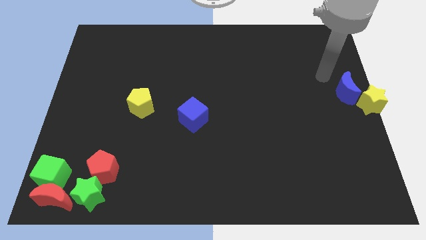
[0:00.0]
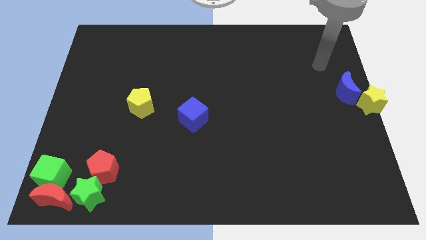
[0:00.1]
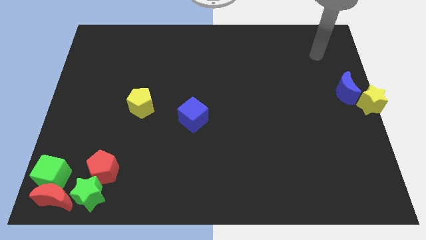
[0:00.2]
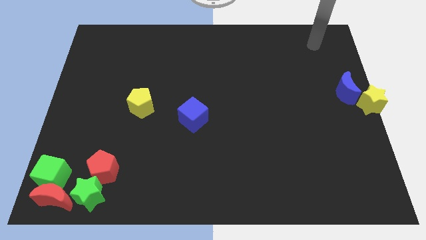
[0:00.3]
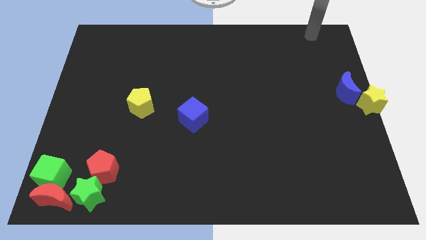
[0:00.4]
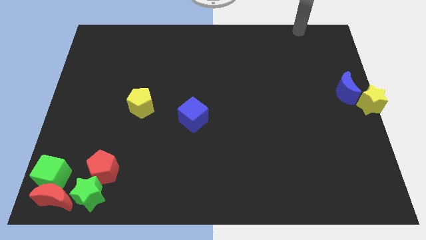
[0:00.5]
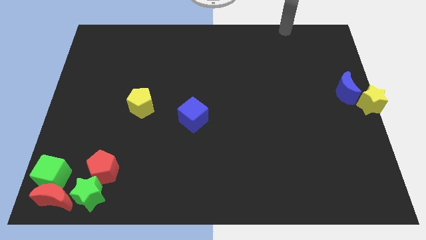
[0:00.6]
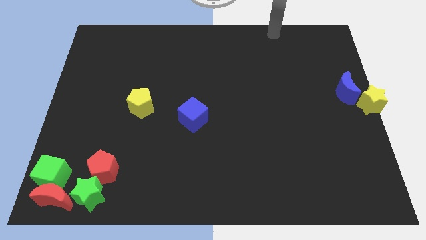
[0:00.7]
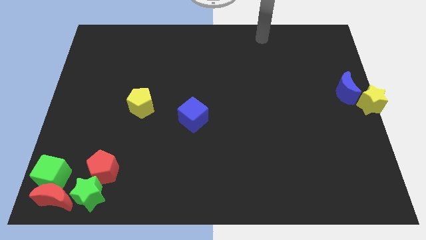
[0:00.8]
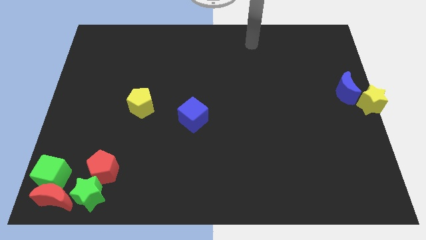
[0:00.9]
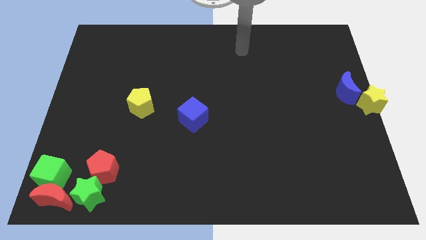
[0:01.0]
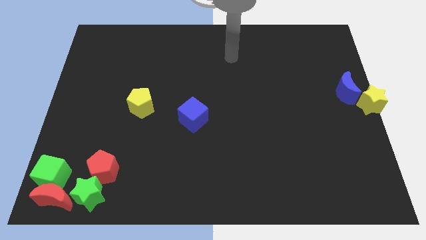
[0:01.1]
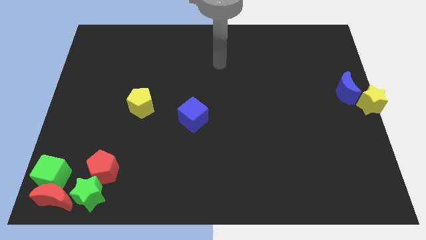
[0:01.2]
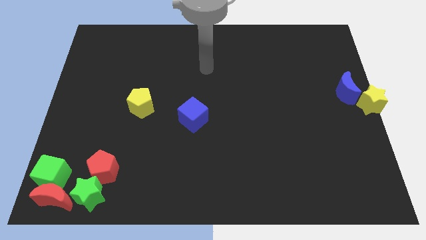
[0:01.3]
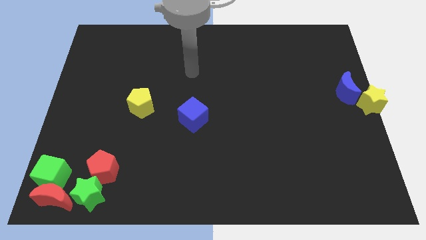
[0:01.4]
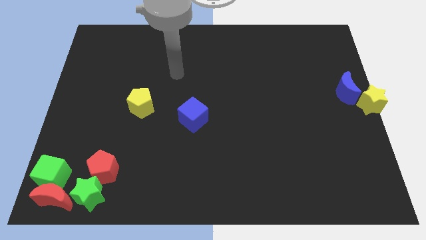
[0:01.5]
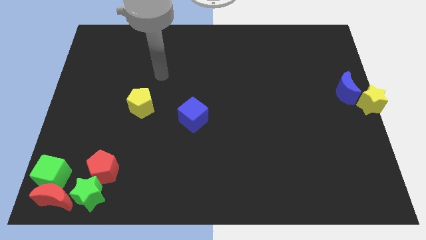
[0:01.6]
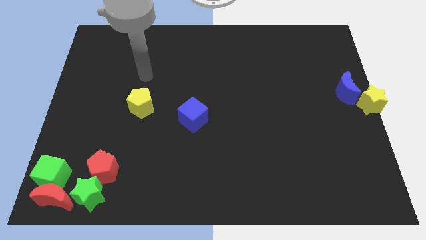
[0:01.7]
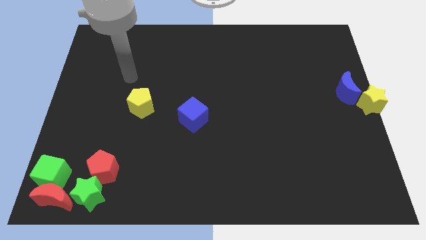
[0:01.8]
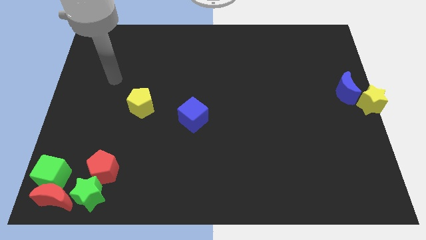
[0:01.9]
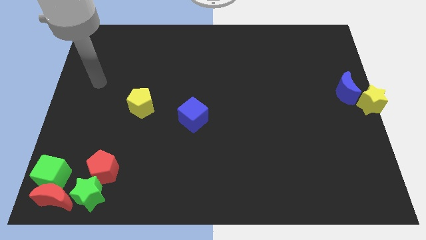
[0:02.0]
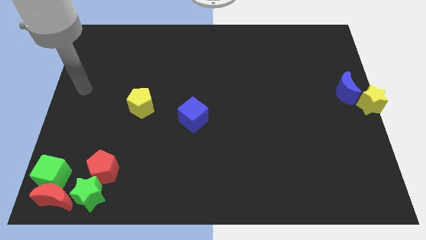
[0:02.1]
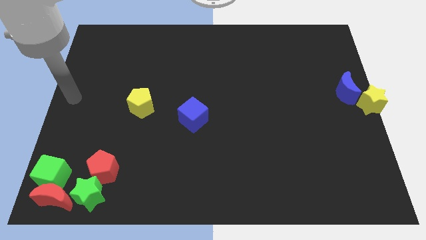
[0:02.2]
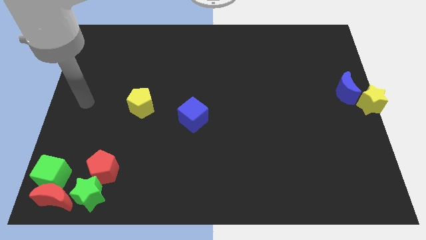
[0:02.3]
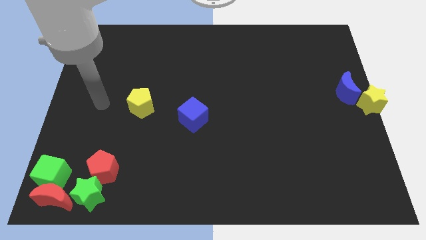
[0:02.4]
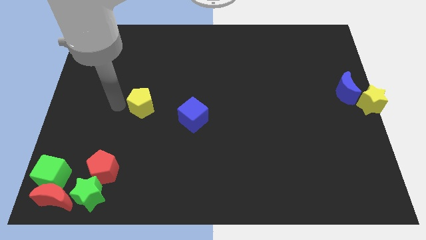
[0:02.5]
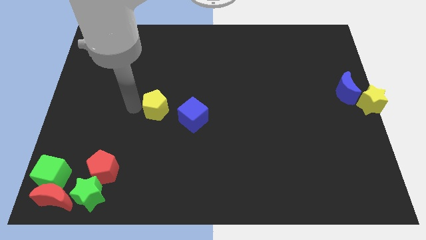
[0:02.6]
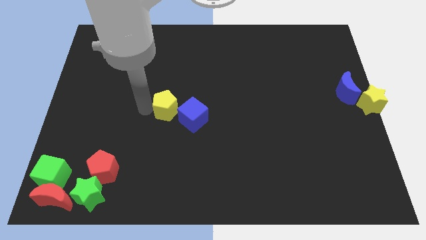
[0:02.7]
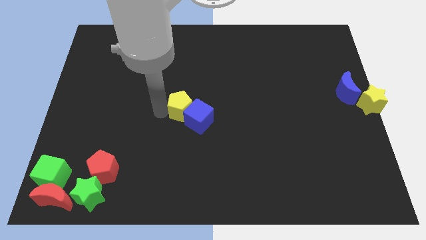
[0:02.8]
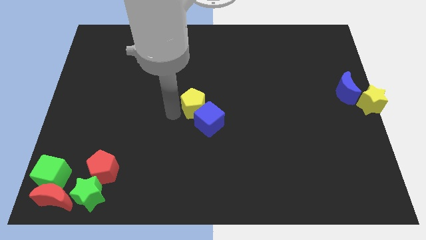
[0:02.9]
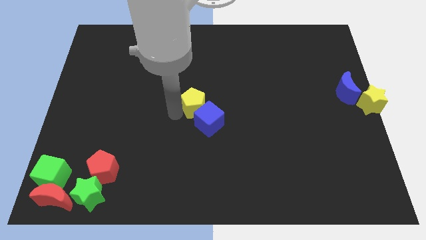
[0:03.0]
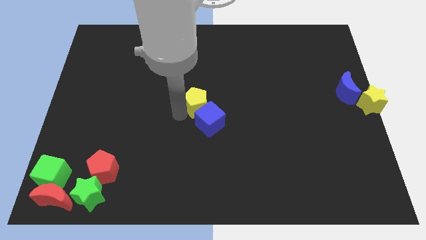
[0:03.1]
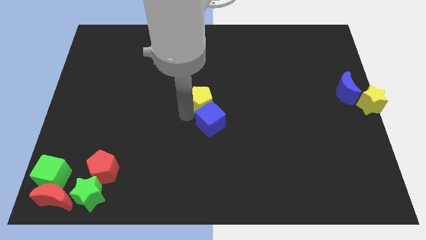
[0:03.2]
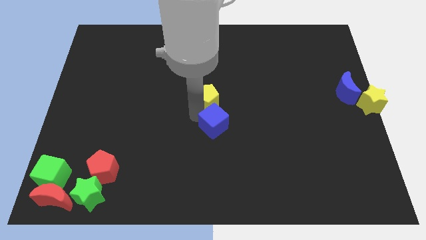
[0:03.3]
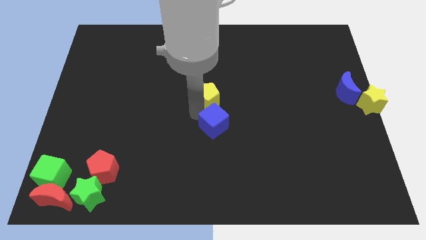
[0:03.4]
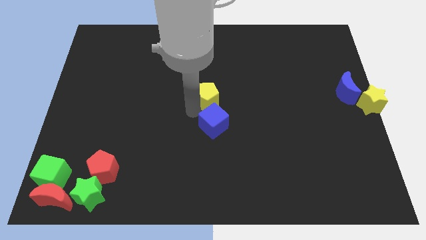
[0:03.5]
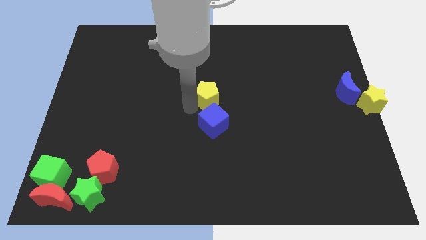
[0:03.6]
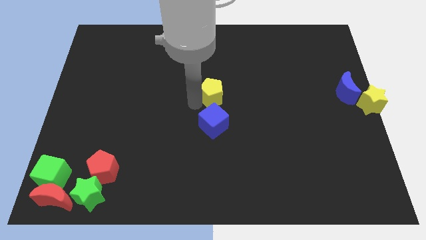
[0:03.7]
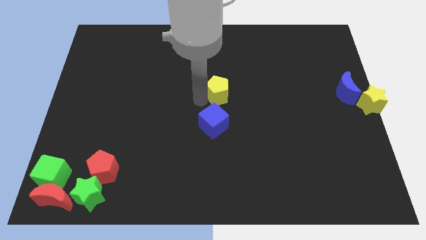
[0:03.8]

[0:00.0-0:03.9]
slide the yellow pentagon to the top side of the blue cube

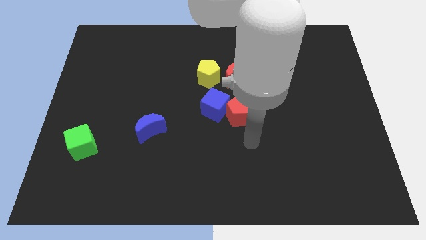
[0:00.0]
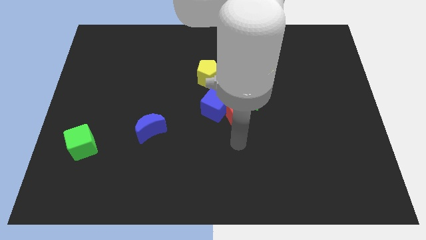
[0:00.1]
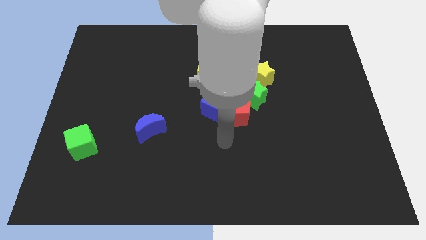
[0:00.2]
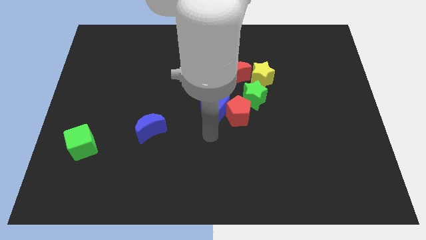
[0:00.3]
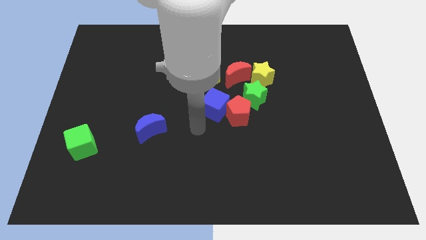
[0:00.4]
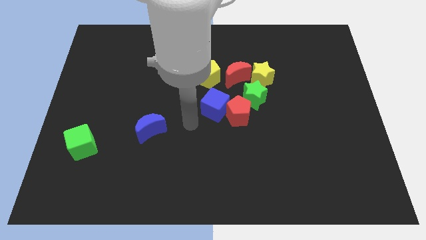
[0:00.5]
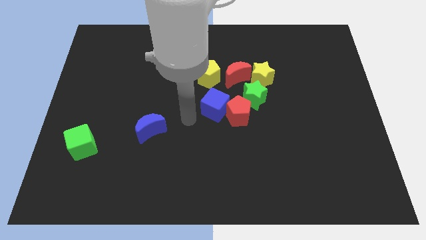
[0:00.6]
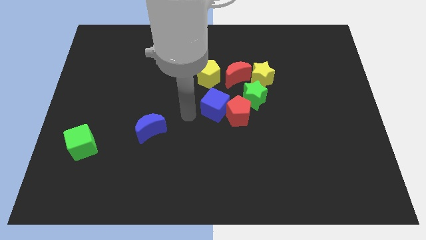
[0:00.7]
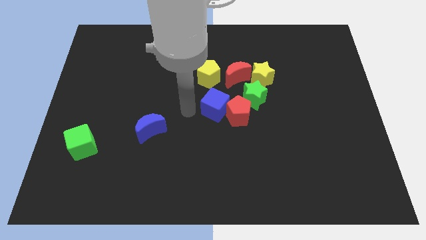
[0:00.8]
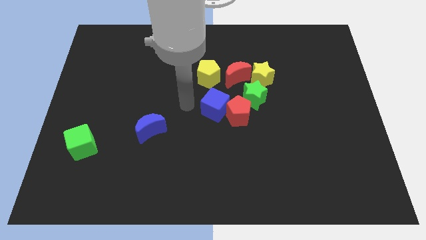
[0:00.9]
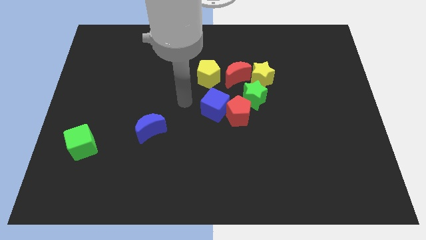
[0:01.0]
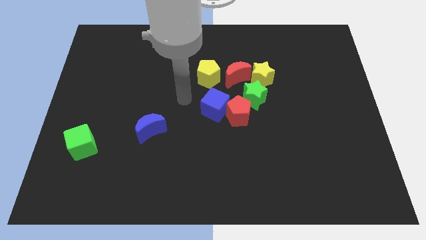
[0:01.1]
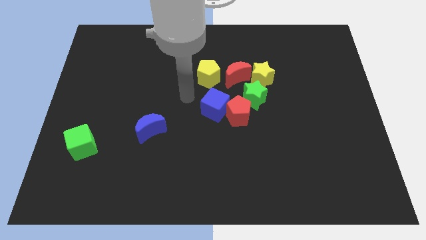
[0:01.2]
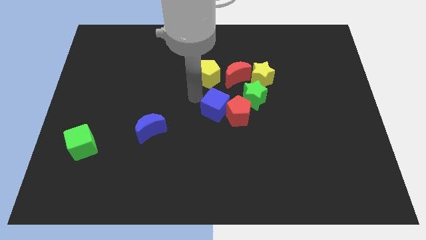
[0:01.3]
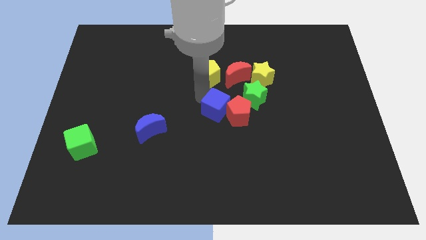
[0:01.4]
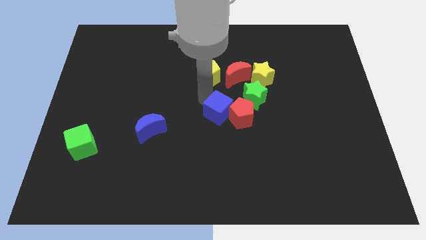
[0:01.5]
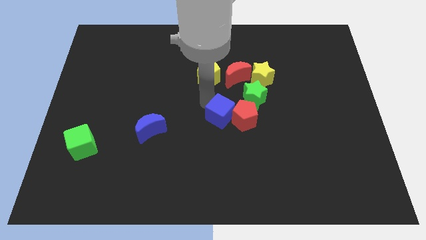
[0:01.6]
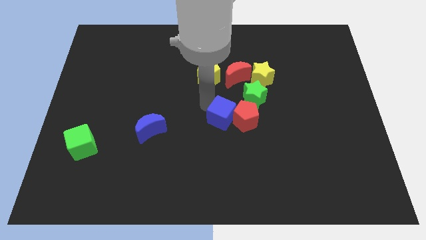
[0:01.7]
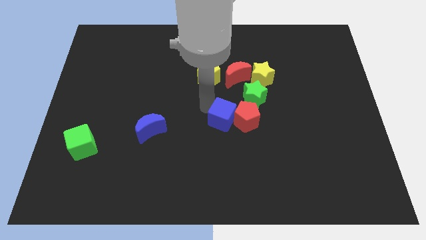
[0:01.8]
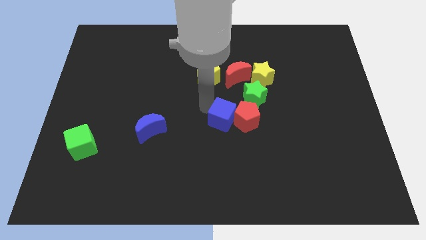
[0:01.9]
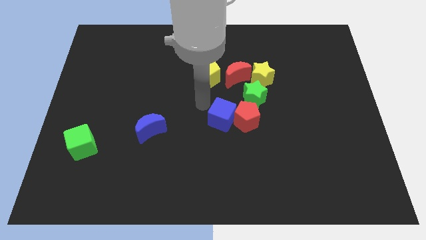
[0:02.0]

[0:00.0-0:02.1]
push a group of blocks to the center of the board

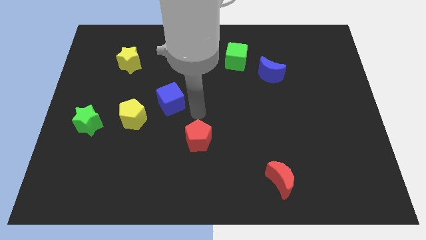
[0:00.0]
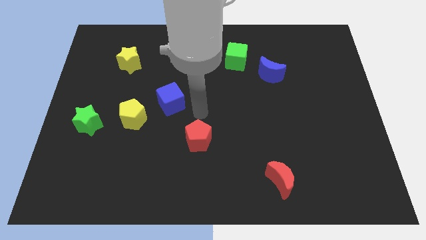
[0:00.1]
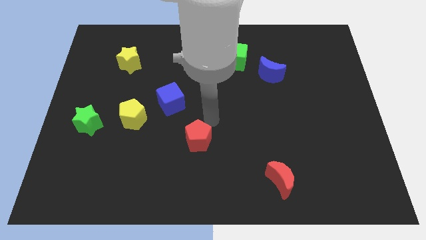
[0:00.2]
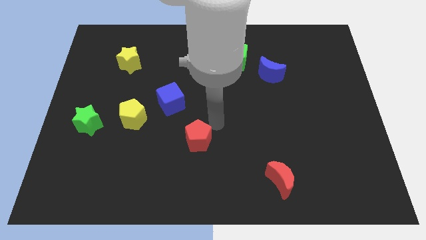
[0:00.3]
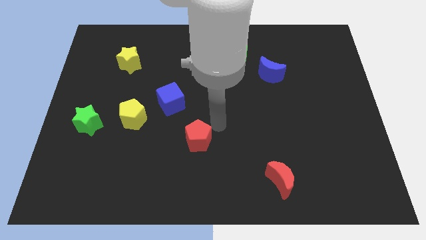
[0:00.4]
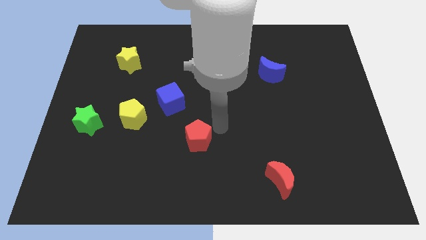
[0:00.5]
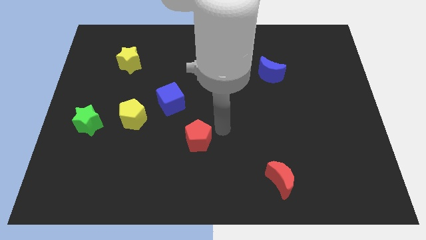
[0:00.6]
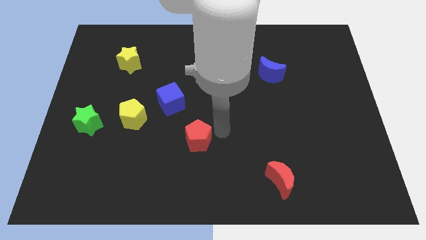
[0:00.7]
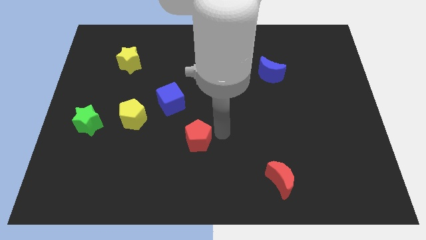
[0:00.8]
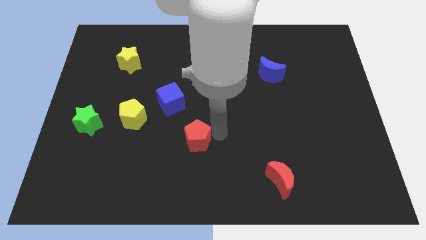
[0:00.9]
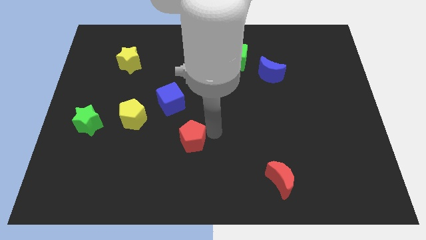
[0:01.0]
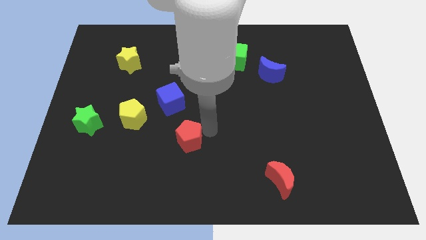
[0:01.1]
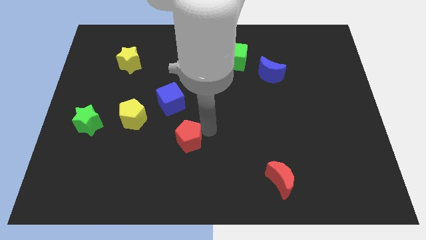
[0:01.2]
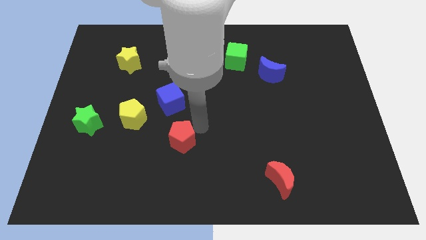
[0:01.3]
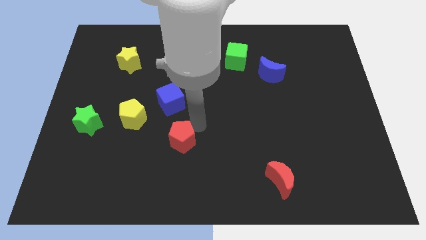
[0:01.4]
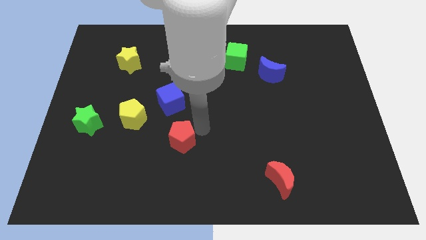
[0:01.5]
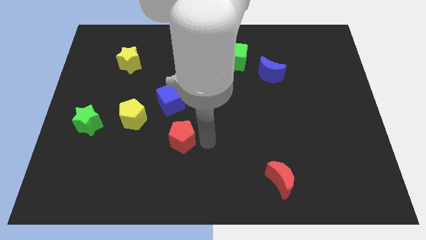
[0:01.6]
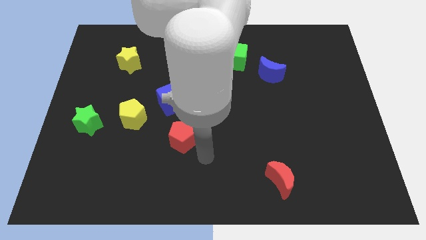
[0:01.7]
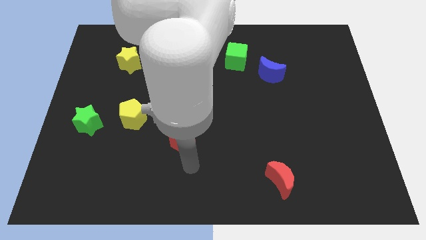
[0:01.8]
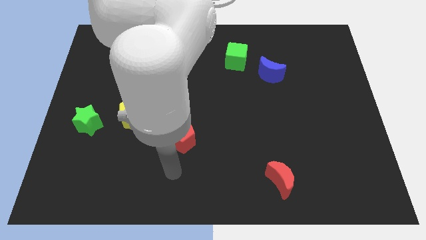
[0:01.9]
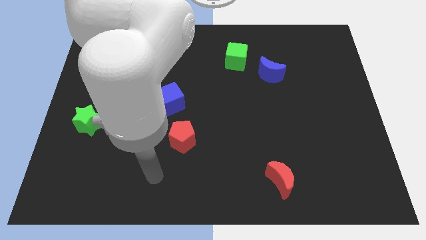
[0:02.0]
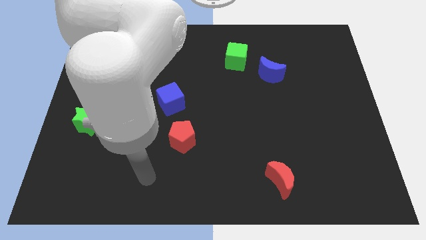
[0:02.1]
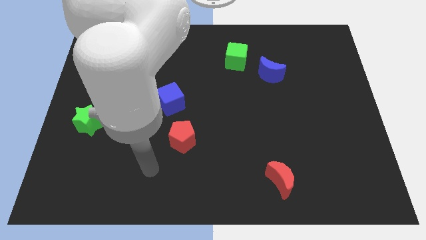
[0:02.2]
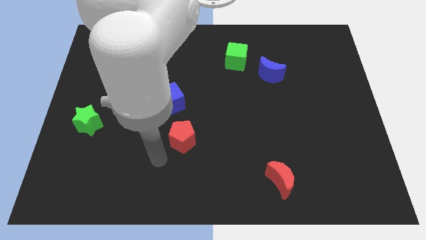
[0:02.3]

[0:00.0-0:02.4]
slightly move the red pentagon

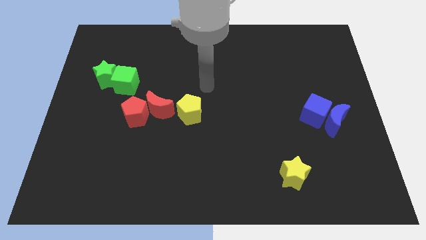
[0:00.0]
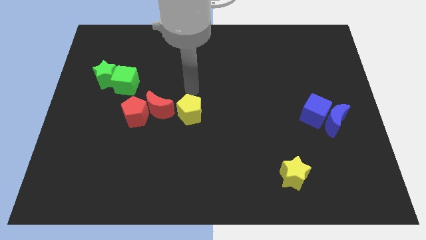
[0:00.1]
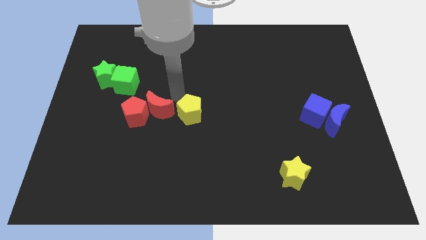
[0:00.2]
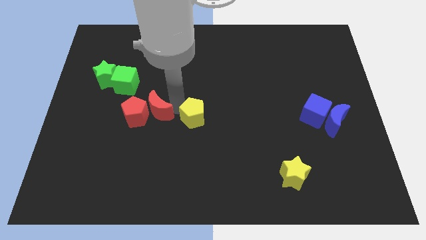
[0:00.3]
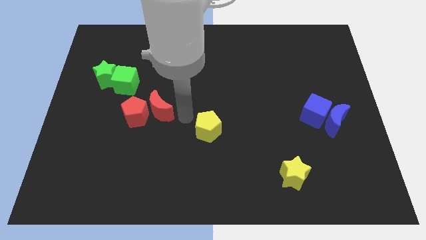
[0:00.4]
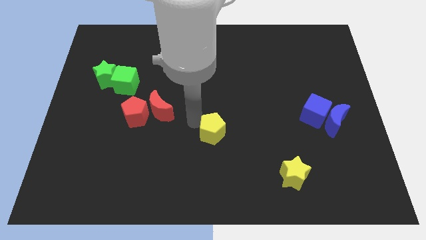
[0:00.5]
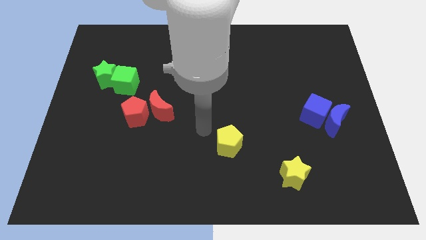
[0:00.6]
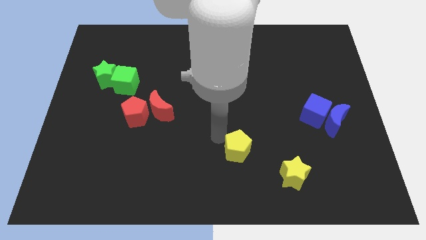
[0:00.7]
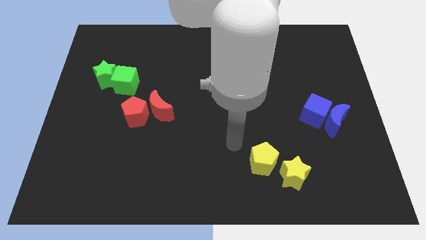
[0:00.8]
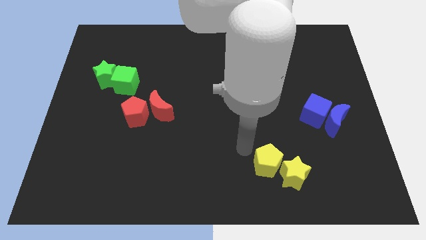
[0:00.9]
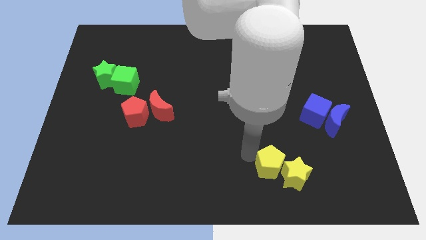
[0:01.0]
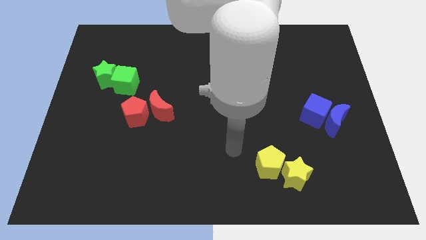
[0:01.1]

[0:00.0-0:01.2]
place the yellow pentagon close to the yellow star
